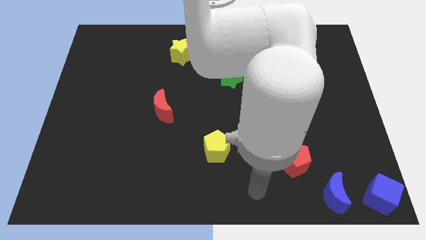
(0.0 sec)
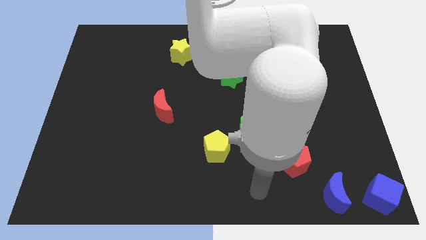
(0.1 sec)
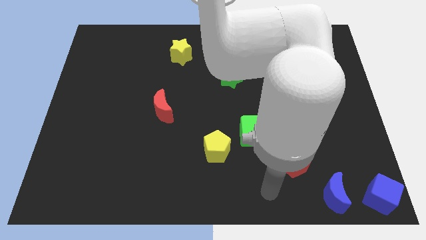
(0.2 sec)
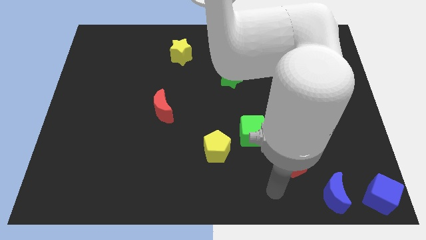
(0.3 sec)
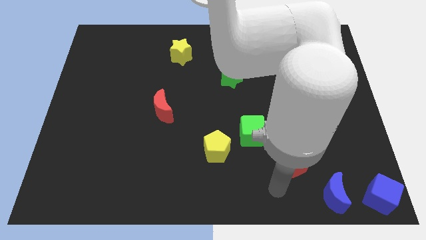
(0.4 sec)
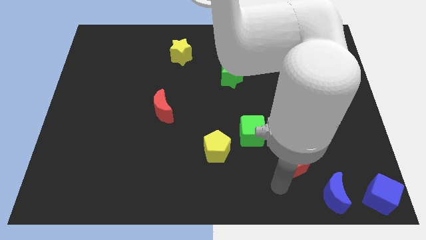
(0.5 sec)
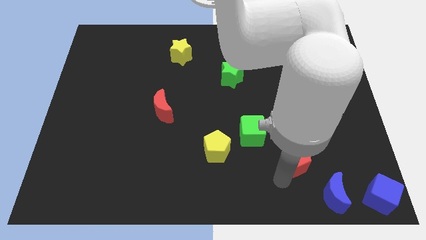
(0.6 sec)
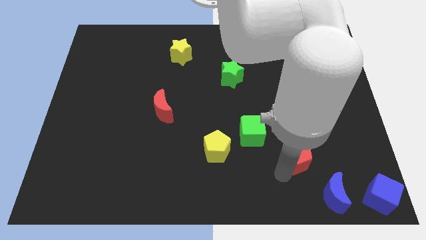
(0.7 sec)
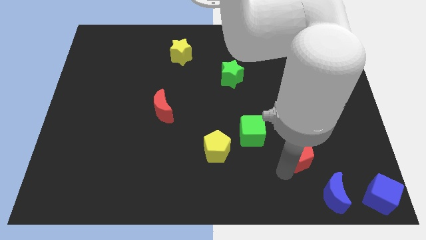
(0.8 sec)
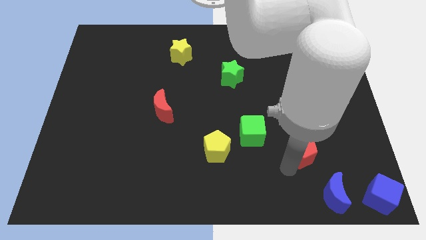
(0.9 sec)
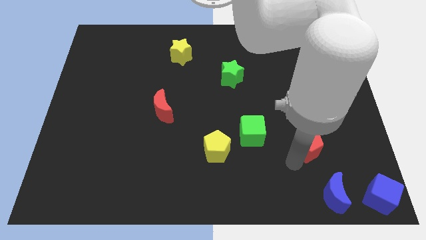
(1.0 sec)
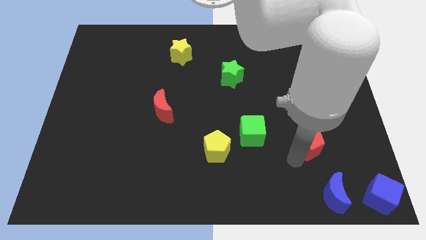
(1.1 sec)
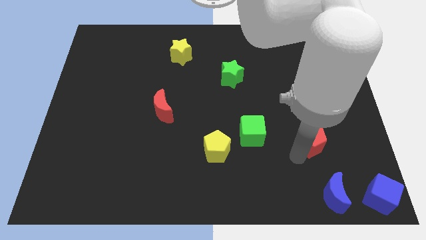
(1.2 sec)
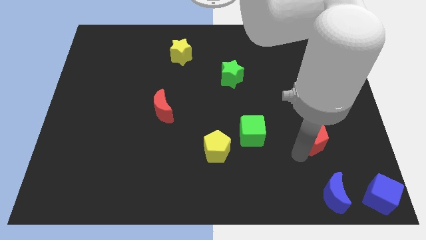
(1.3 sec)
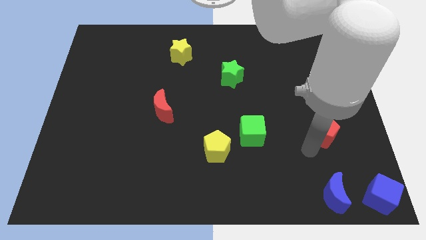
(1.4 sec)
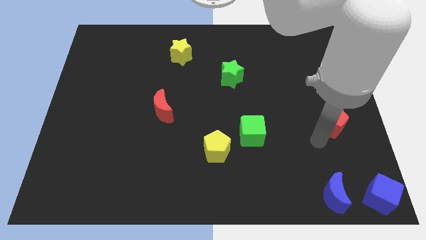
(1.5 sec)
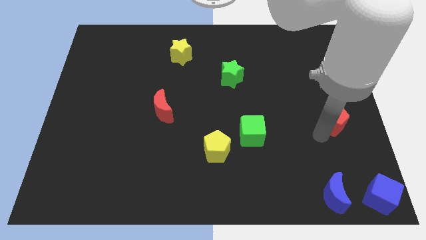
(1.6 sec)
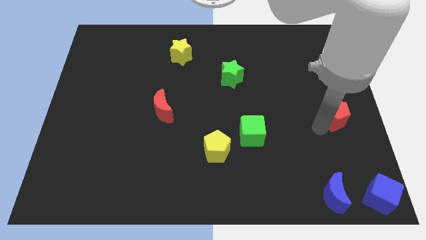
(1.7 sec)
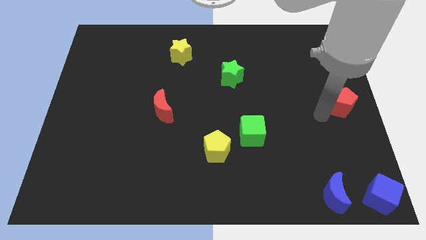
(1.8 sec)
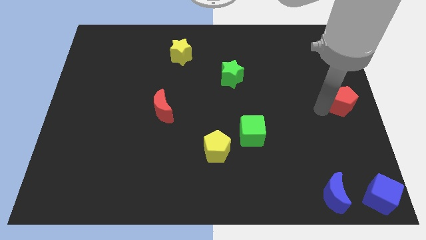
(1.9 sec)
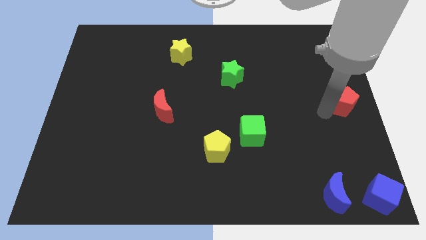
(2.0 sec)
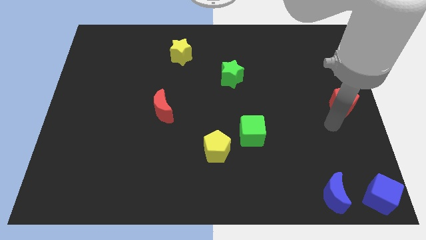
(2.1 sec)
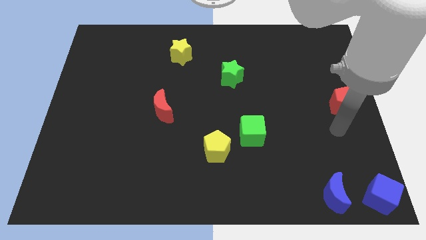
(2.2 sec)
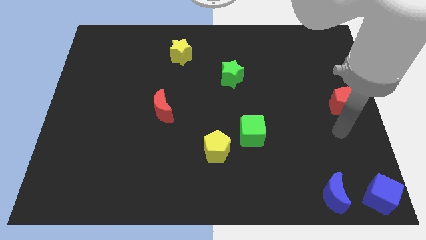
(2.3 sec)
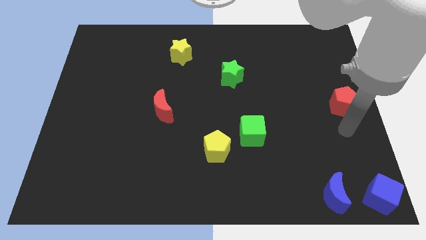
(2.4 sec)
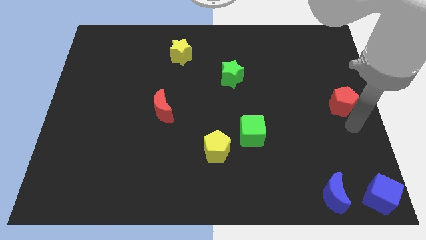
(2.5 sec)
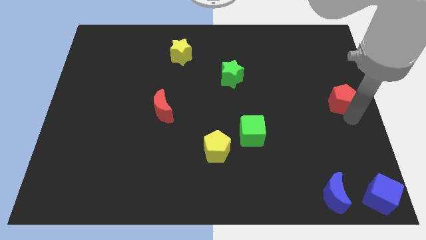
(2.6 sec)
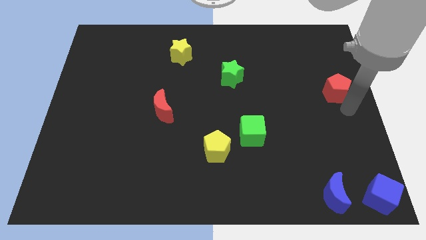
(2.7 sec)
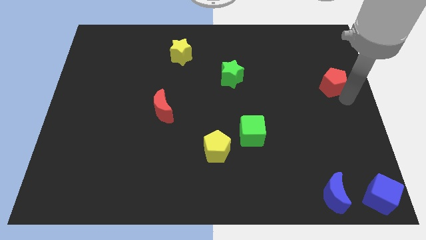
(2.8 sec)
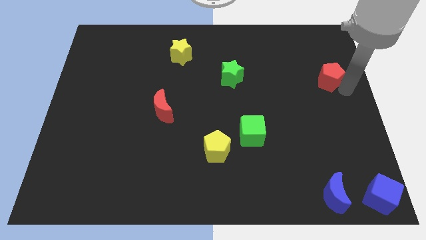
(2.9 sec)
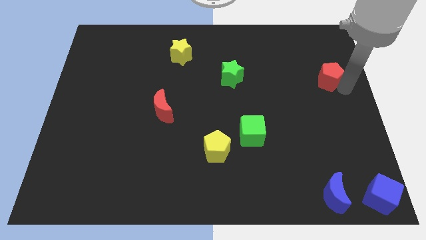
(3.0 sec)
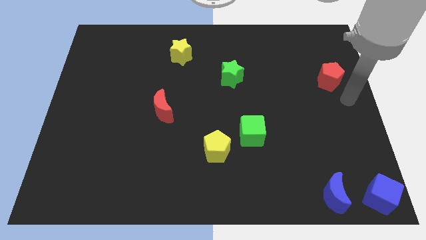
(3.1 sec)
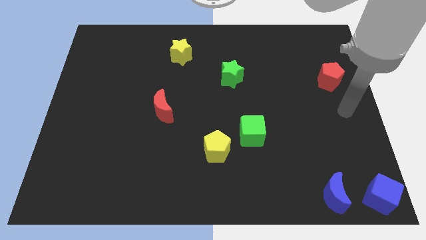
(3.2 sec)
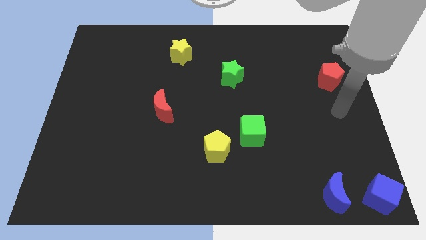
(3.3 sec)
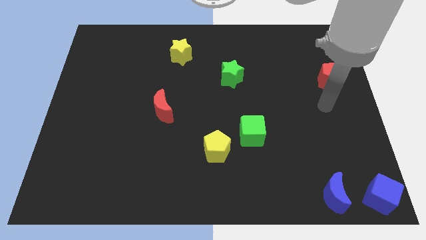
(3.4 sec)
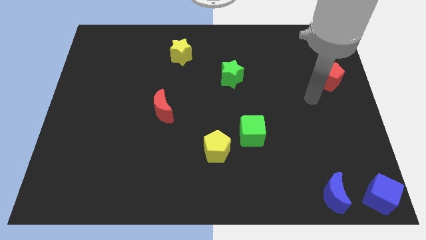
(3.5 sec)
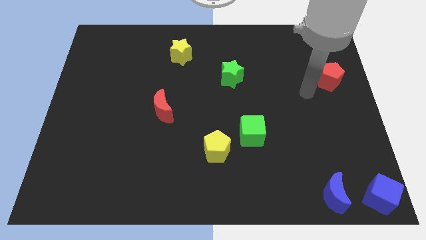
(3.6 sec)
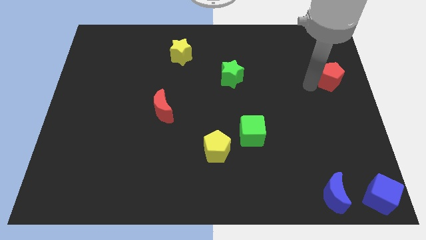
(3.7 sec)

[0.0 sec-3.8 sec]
push the red pentagon towards top right side

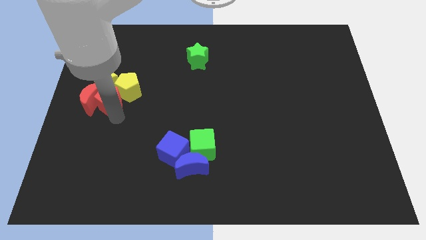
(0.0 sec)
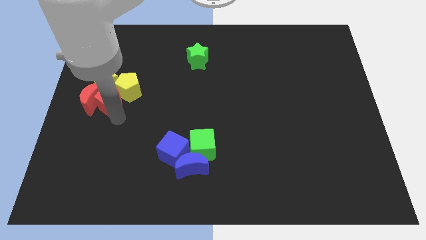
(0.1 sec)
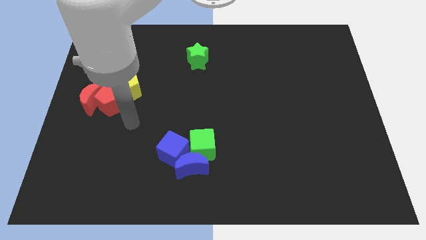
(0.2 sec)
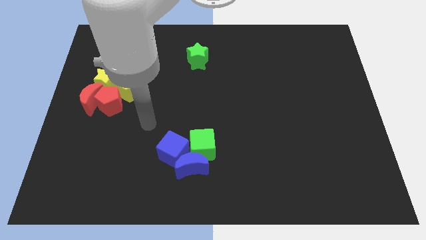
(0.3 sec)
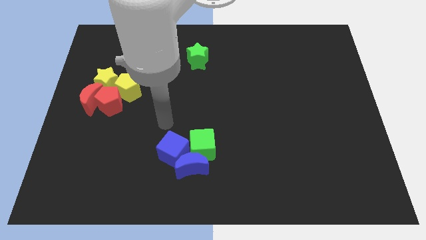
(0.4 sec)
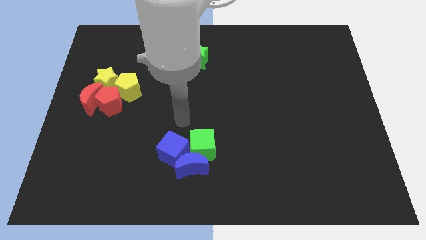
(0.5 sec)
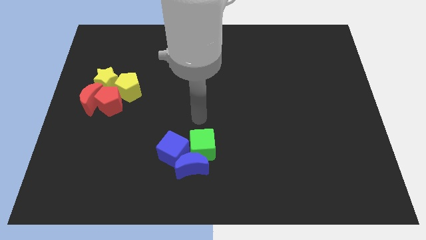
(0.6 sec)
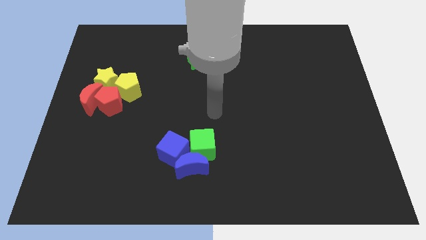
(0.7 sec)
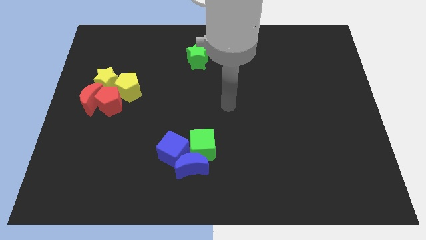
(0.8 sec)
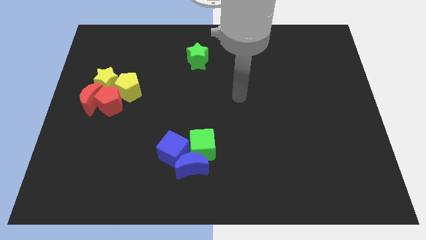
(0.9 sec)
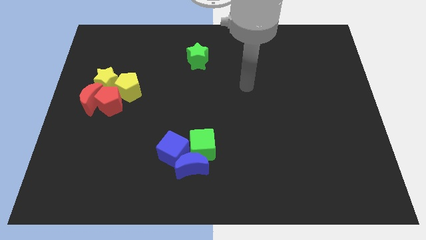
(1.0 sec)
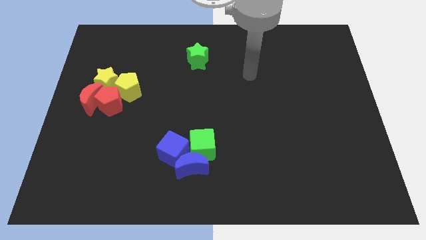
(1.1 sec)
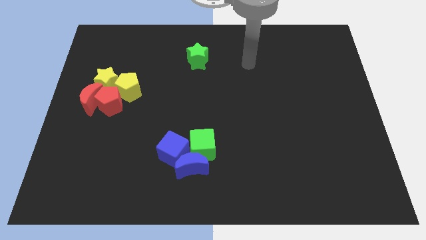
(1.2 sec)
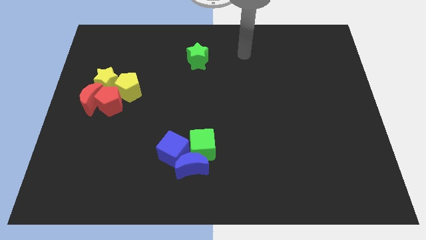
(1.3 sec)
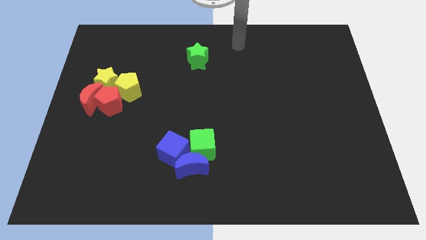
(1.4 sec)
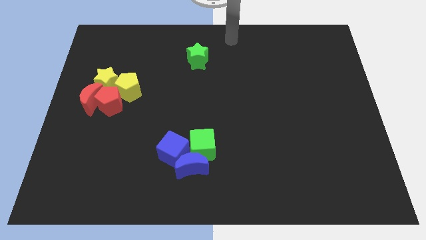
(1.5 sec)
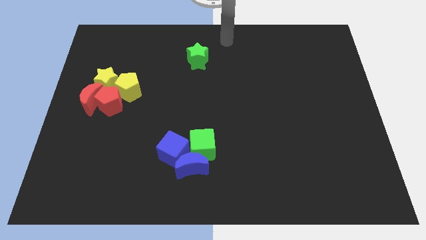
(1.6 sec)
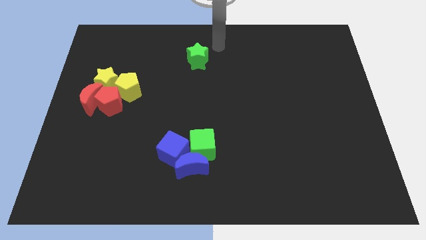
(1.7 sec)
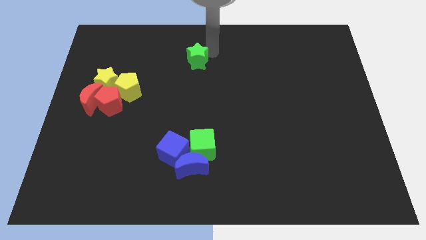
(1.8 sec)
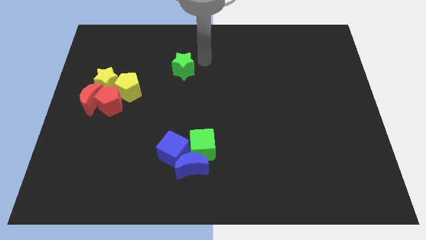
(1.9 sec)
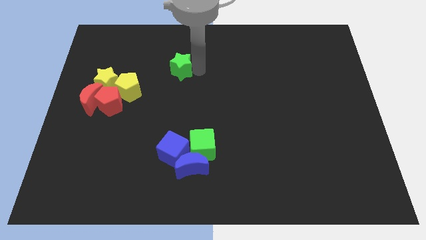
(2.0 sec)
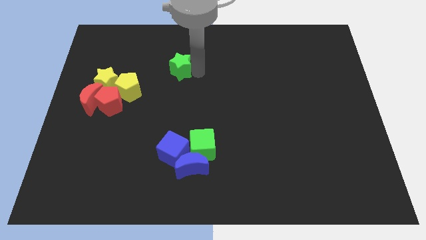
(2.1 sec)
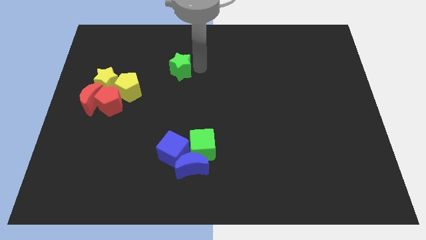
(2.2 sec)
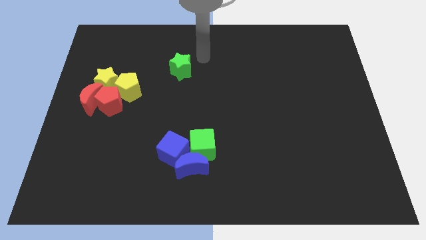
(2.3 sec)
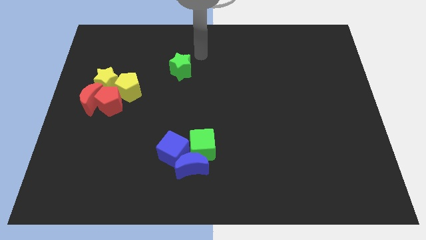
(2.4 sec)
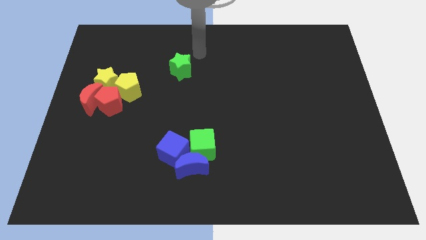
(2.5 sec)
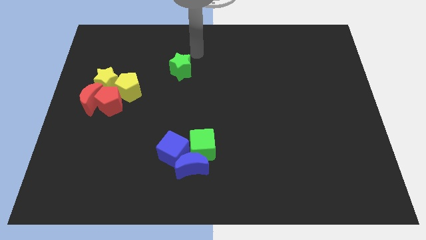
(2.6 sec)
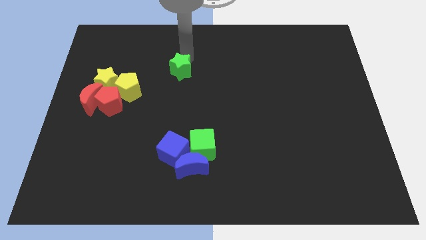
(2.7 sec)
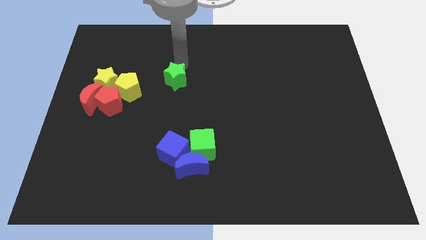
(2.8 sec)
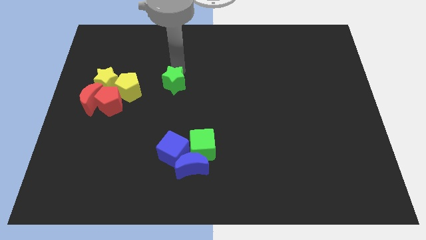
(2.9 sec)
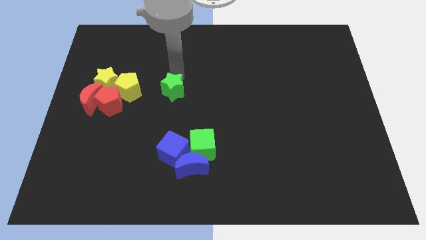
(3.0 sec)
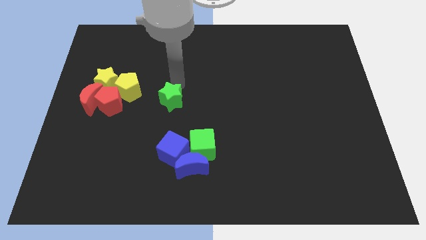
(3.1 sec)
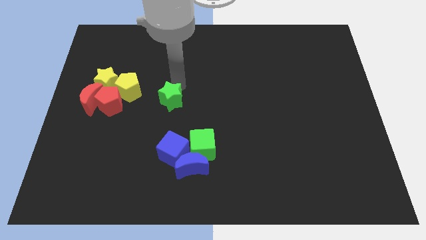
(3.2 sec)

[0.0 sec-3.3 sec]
put the green star parallel to yellow pentagon

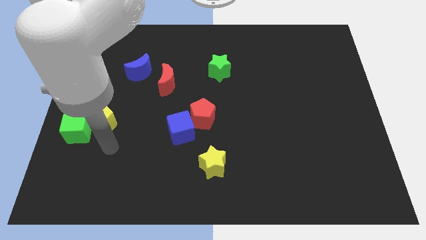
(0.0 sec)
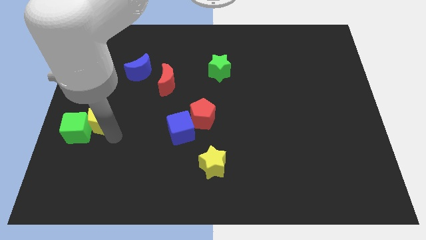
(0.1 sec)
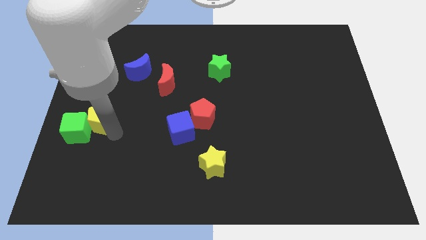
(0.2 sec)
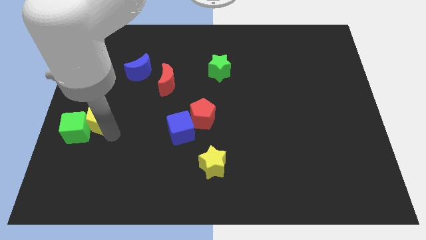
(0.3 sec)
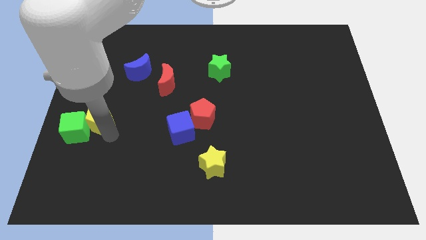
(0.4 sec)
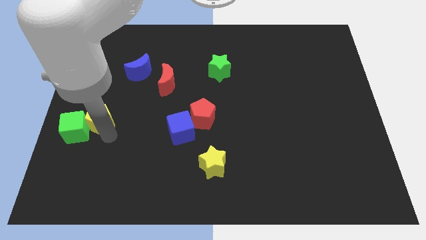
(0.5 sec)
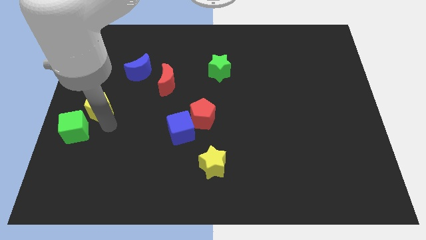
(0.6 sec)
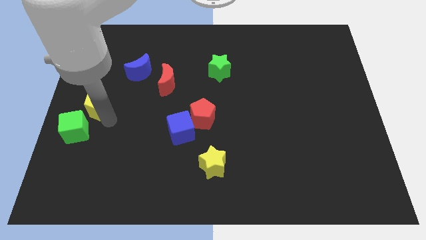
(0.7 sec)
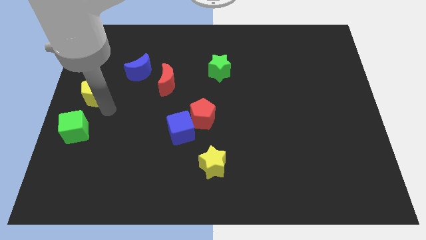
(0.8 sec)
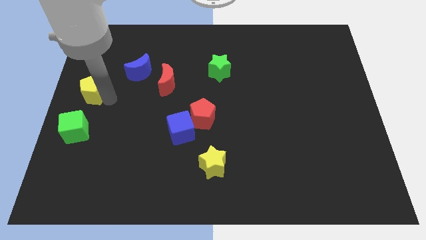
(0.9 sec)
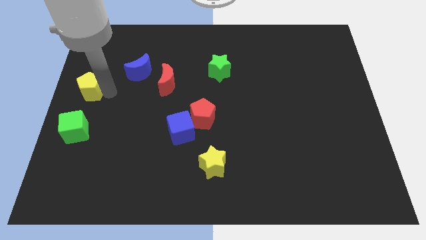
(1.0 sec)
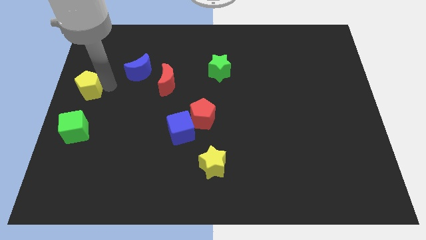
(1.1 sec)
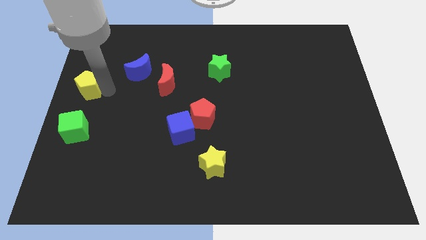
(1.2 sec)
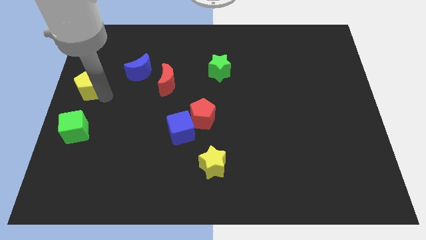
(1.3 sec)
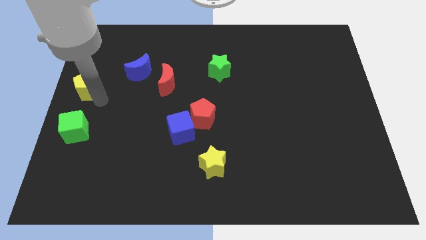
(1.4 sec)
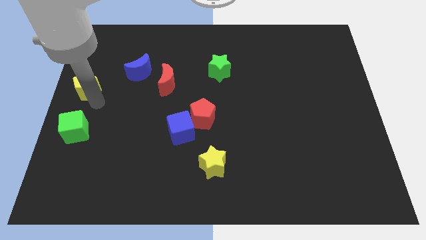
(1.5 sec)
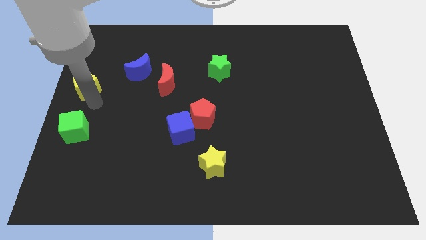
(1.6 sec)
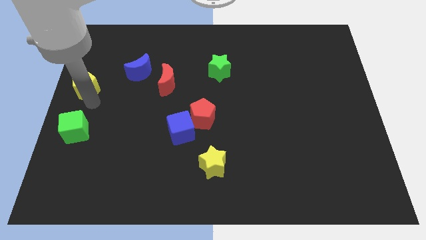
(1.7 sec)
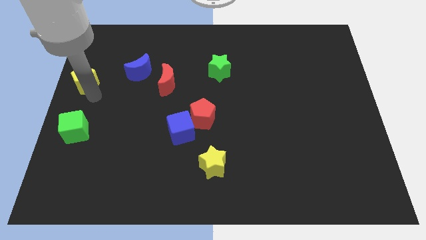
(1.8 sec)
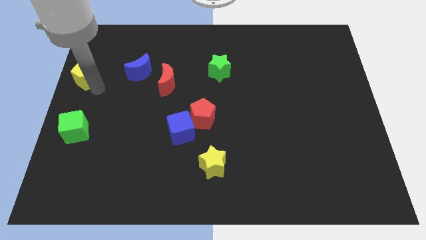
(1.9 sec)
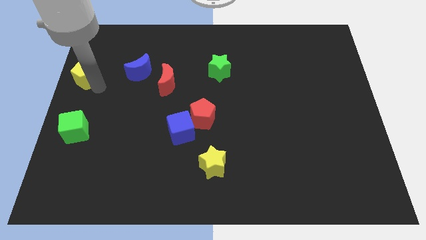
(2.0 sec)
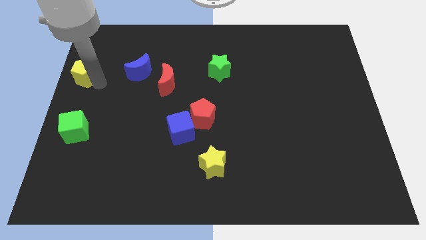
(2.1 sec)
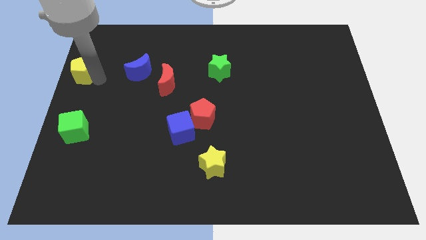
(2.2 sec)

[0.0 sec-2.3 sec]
place the yellow pentagon left to the blue moon
